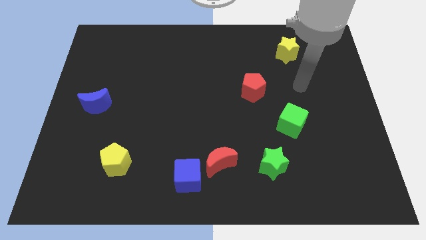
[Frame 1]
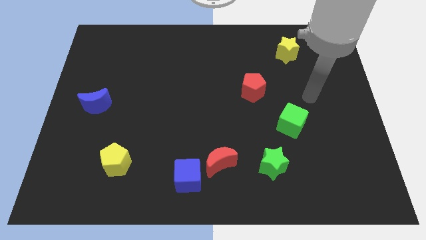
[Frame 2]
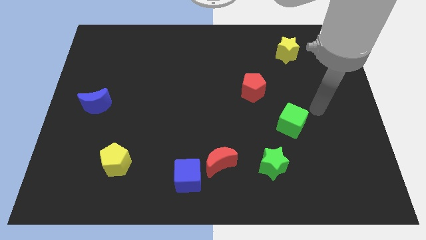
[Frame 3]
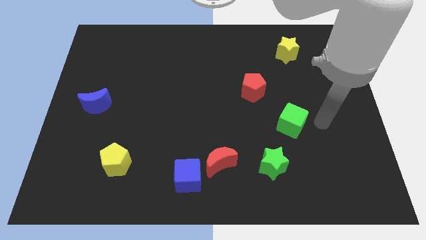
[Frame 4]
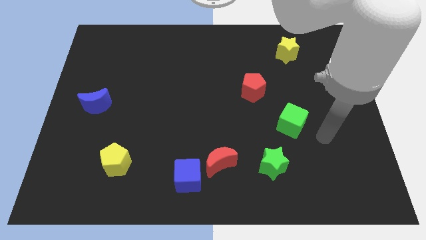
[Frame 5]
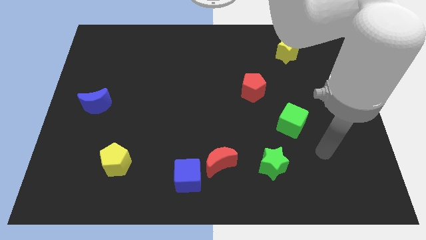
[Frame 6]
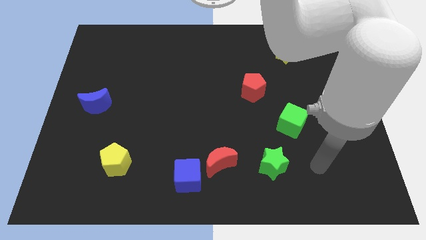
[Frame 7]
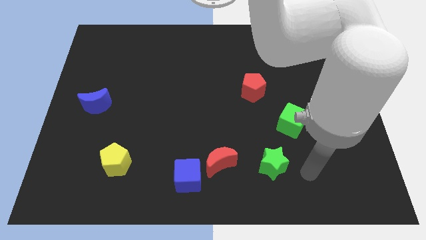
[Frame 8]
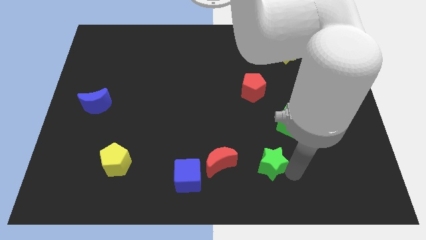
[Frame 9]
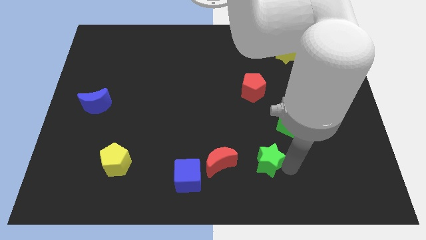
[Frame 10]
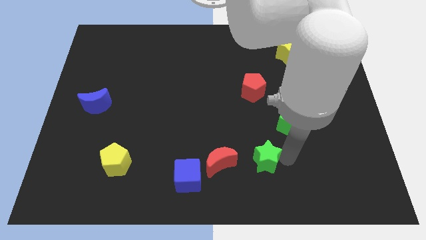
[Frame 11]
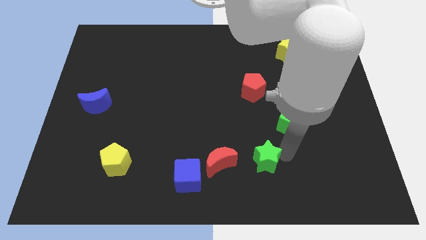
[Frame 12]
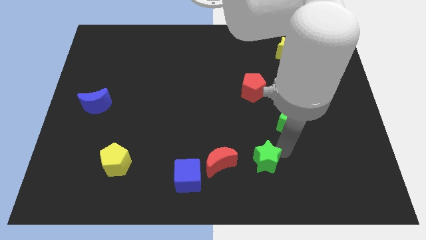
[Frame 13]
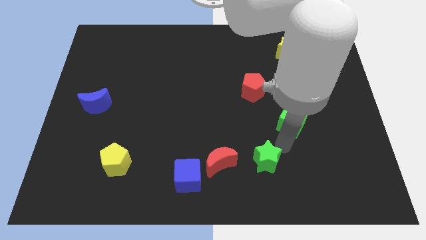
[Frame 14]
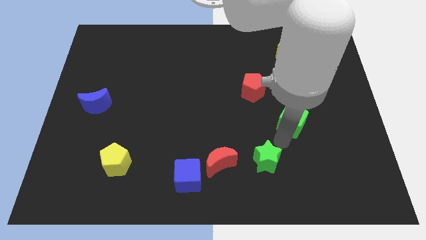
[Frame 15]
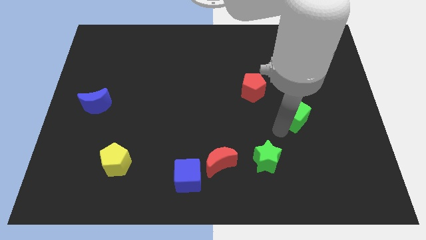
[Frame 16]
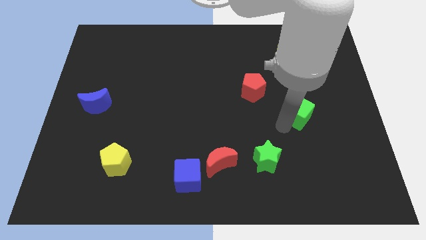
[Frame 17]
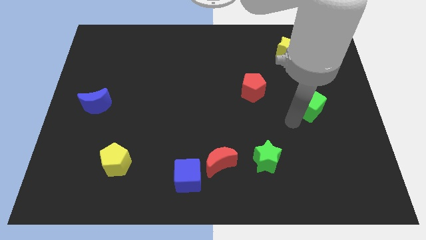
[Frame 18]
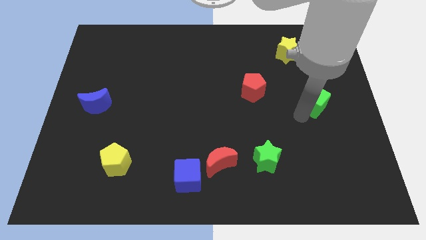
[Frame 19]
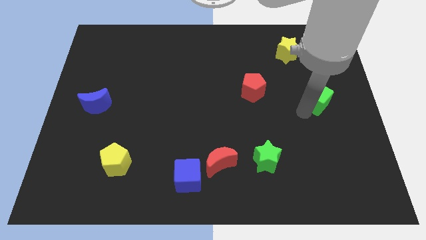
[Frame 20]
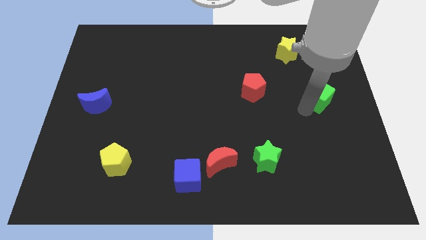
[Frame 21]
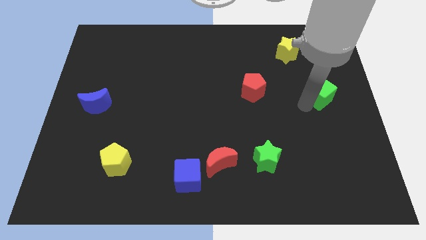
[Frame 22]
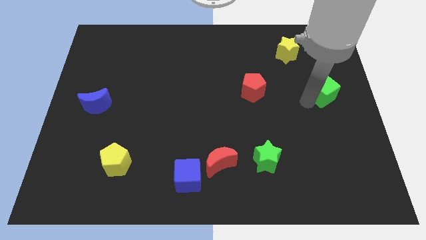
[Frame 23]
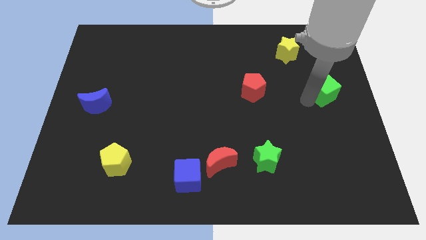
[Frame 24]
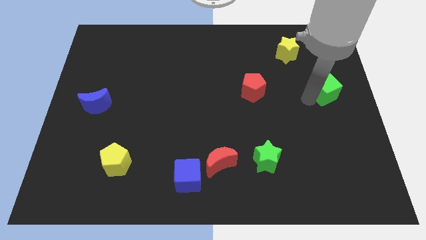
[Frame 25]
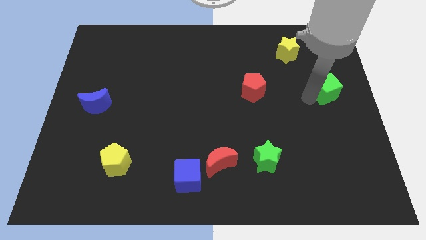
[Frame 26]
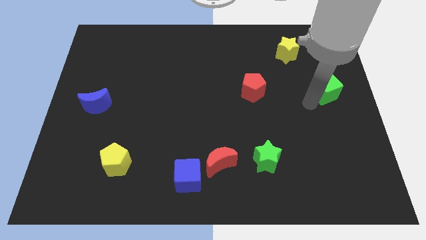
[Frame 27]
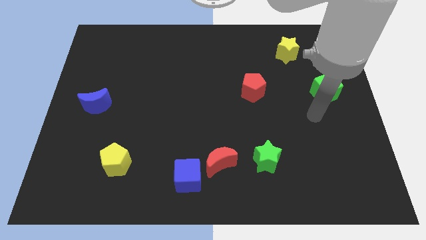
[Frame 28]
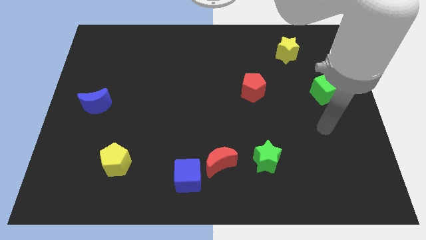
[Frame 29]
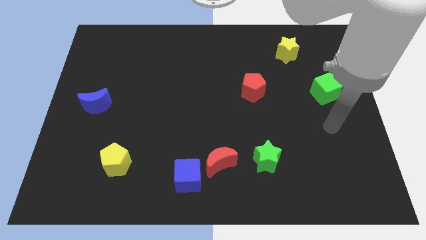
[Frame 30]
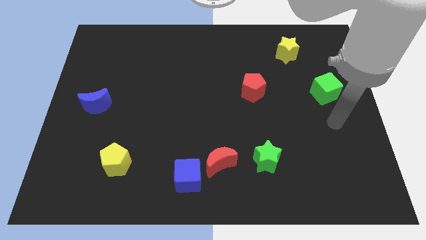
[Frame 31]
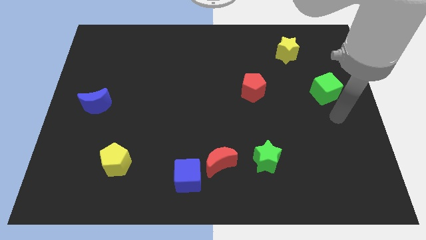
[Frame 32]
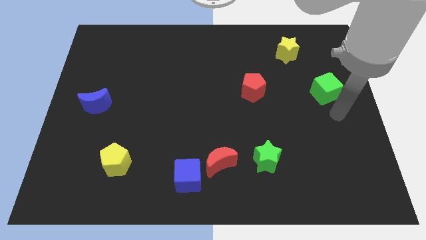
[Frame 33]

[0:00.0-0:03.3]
move the green cube parallel to the red pentagon

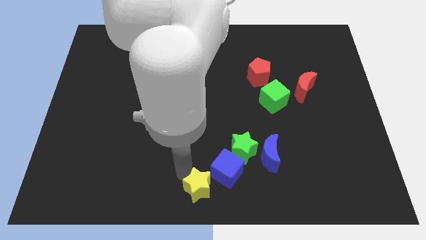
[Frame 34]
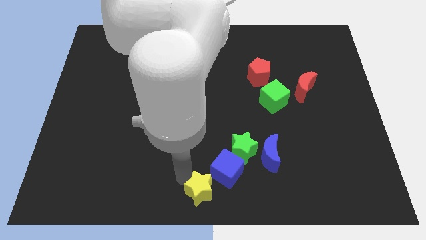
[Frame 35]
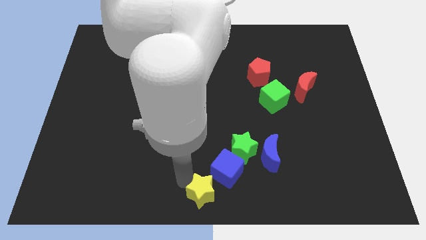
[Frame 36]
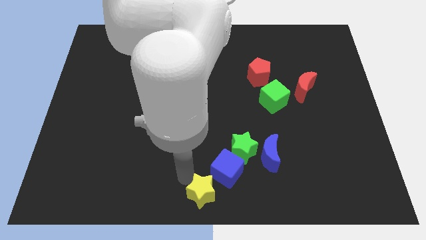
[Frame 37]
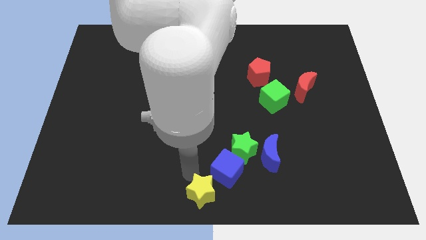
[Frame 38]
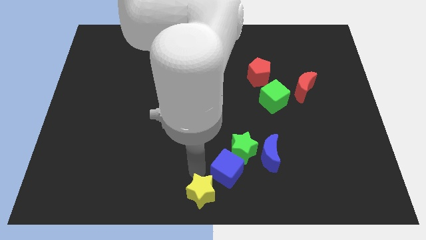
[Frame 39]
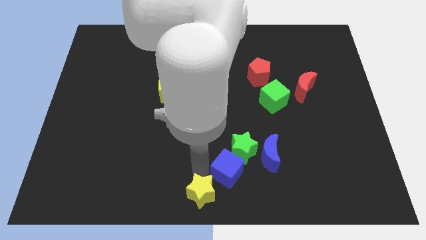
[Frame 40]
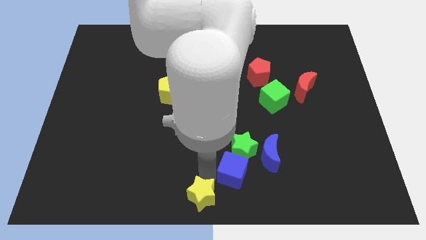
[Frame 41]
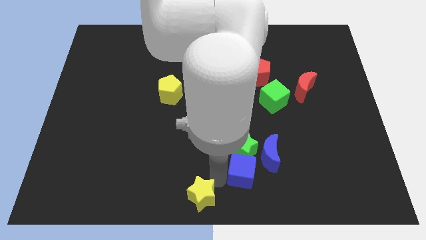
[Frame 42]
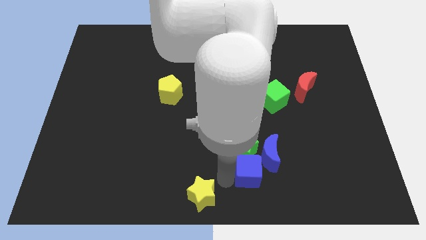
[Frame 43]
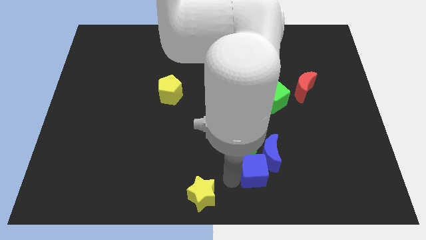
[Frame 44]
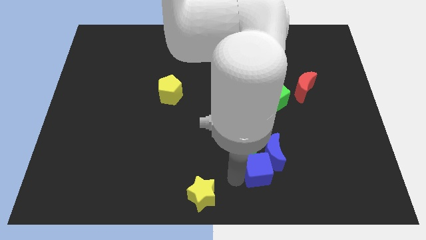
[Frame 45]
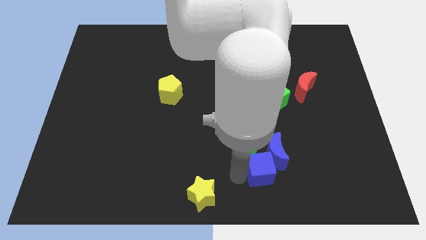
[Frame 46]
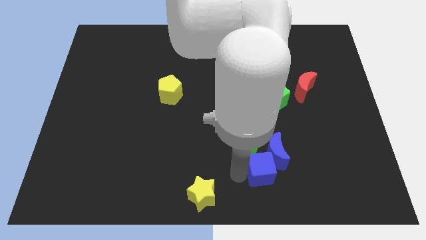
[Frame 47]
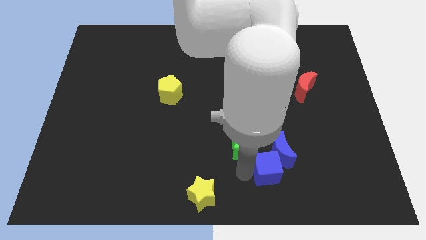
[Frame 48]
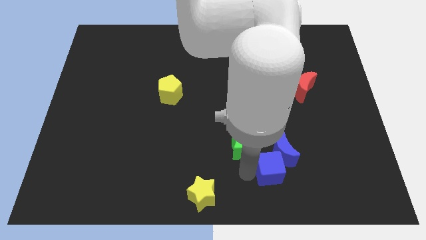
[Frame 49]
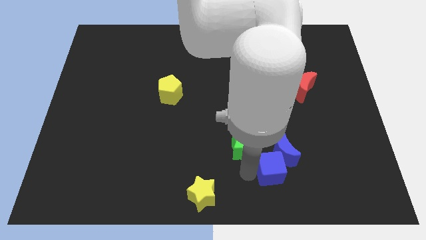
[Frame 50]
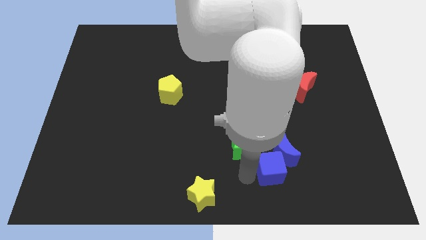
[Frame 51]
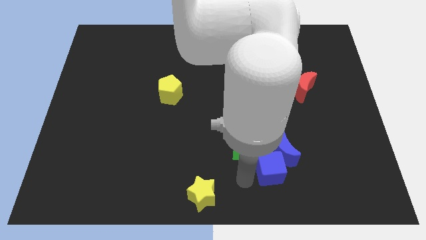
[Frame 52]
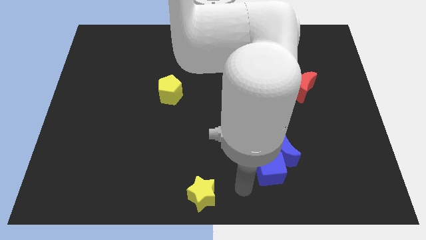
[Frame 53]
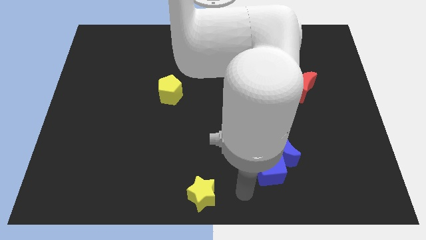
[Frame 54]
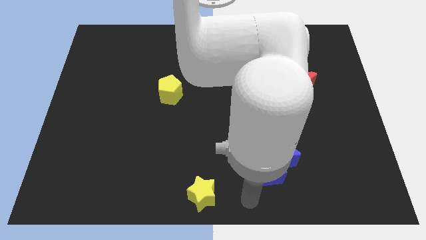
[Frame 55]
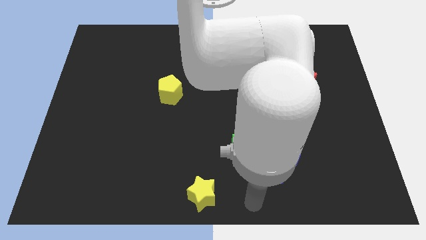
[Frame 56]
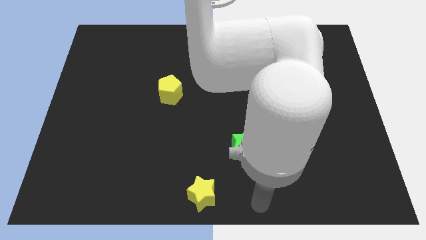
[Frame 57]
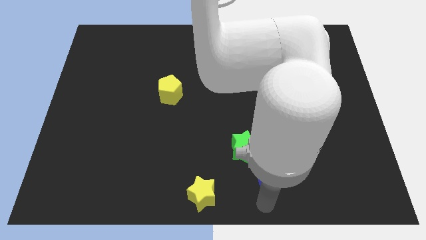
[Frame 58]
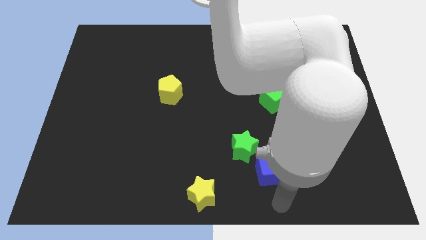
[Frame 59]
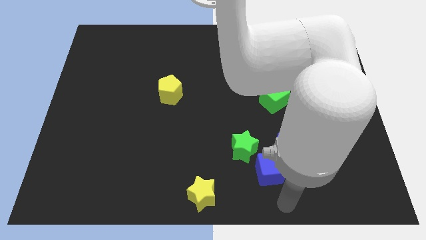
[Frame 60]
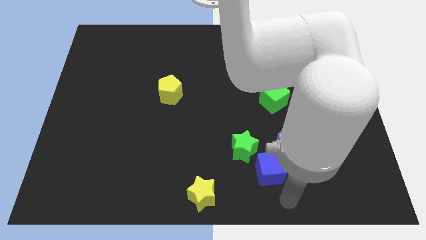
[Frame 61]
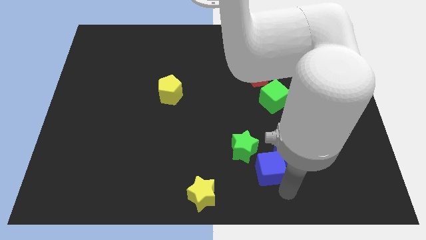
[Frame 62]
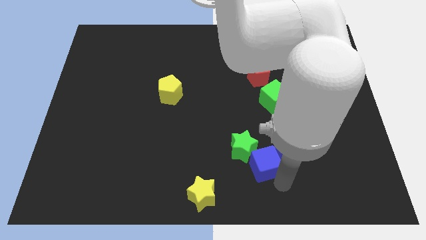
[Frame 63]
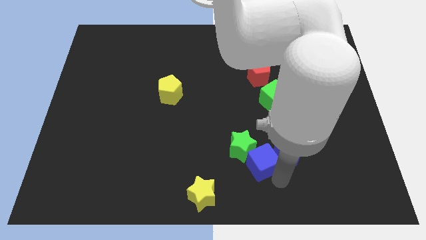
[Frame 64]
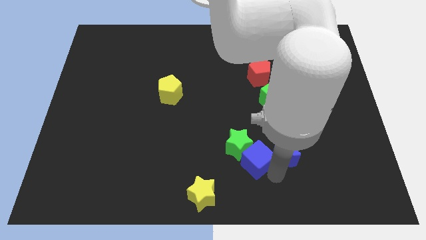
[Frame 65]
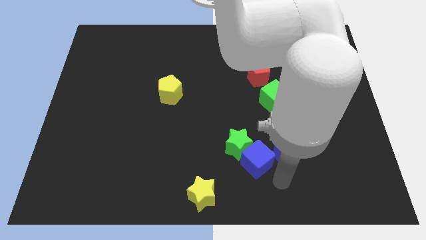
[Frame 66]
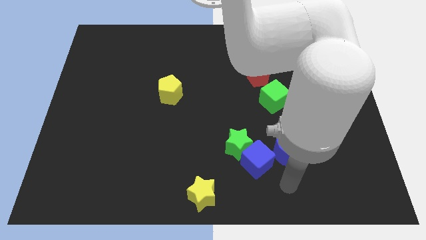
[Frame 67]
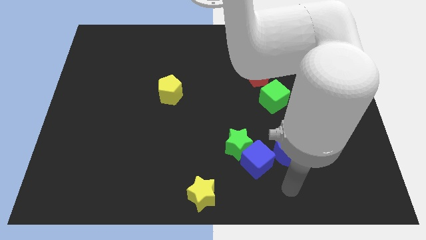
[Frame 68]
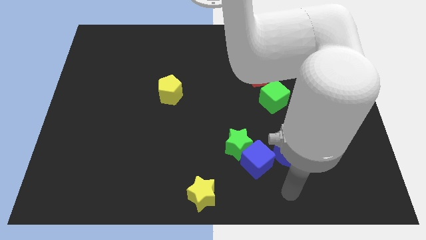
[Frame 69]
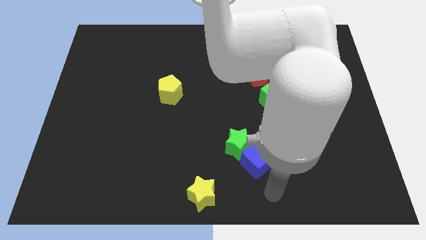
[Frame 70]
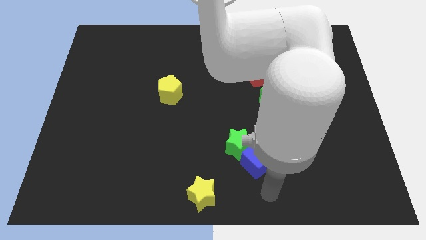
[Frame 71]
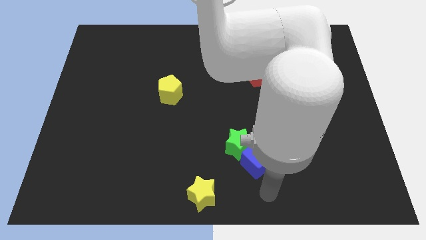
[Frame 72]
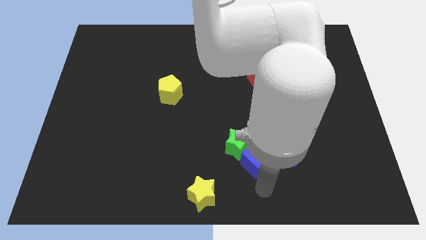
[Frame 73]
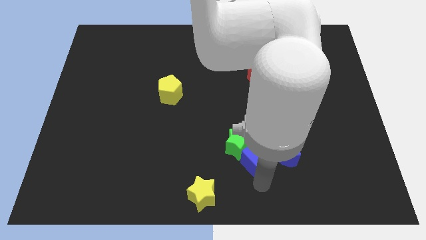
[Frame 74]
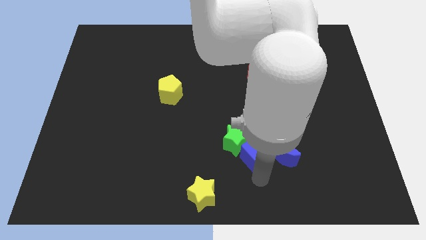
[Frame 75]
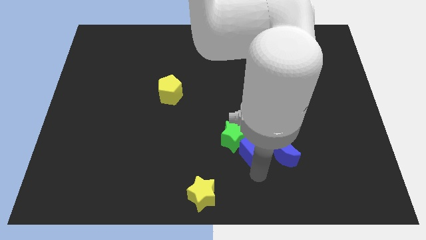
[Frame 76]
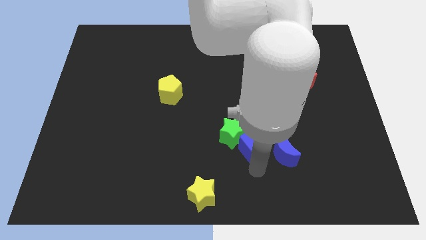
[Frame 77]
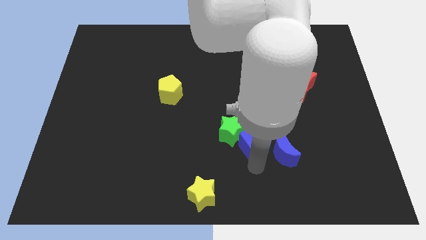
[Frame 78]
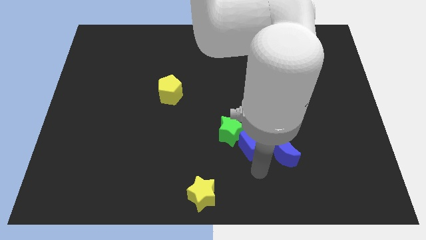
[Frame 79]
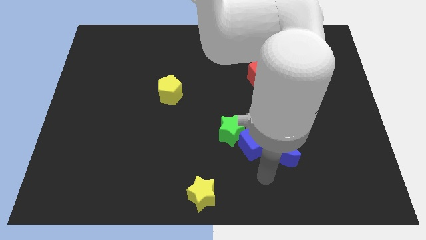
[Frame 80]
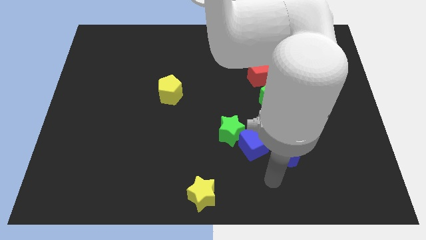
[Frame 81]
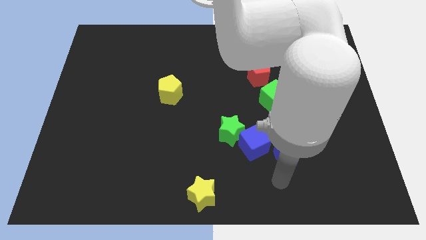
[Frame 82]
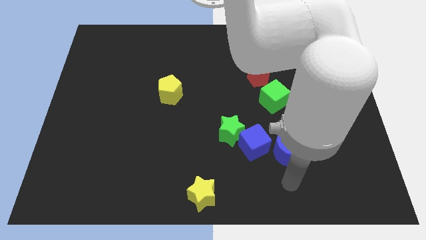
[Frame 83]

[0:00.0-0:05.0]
separate the yellow star and blue cube

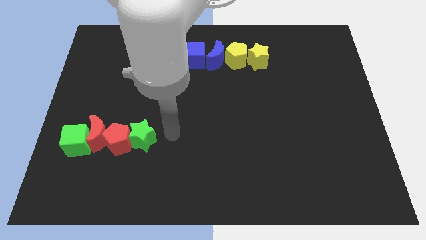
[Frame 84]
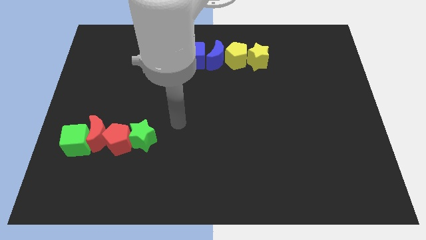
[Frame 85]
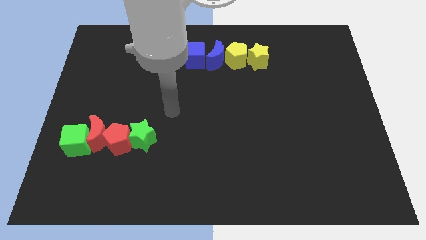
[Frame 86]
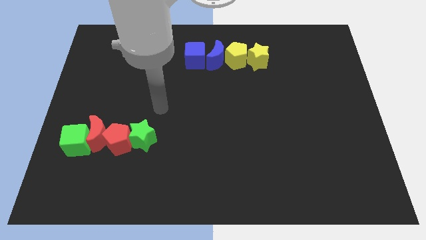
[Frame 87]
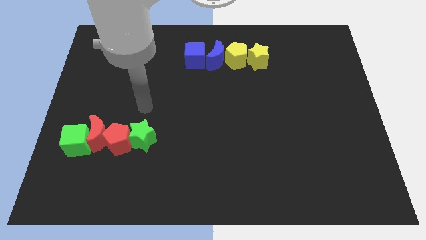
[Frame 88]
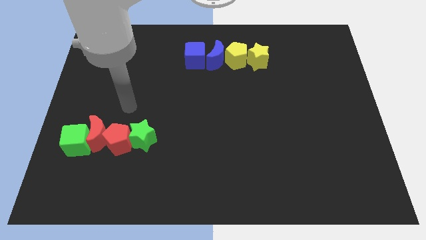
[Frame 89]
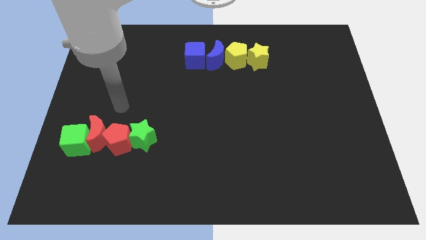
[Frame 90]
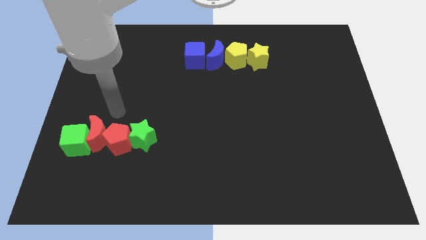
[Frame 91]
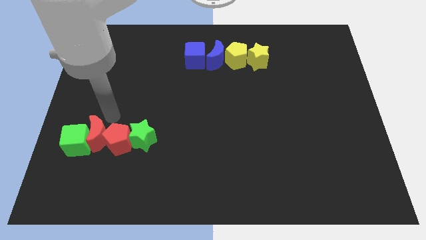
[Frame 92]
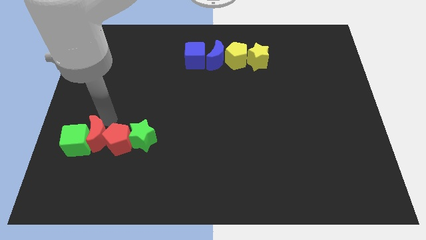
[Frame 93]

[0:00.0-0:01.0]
place your hand above the red pentagon
